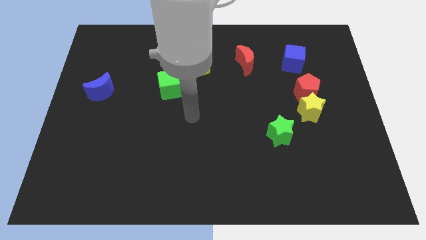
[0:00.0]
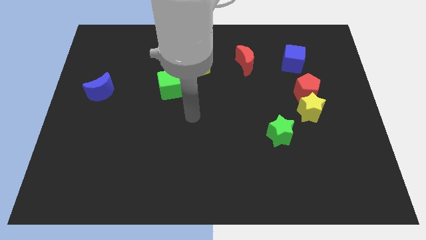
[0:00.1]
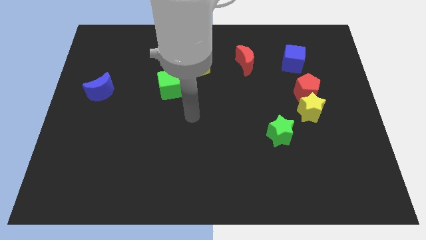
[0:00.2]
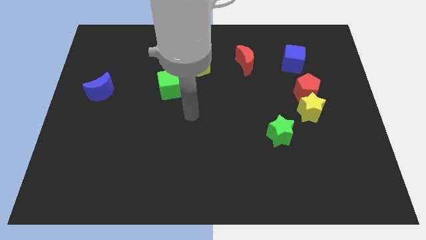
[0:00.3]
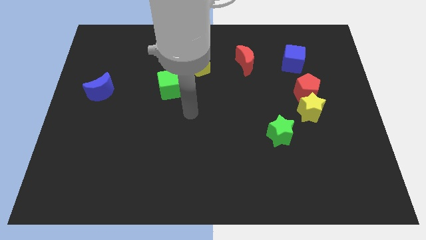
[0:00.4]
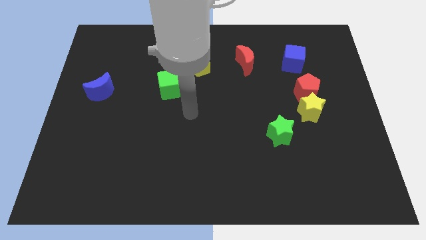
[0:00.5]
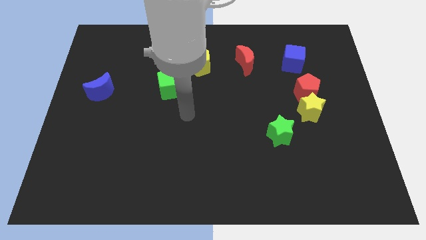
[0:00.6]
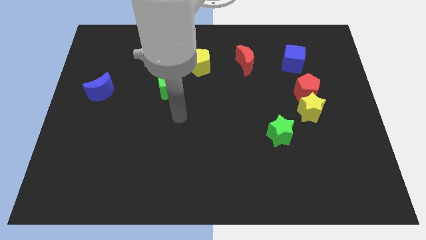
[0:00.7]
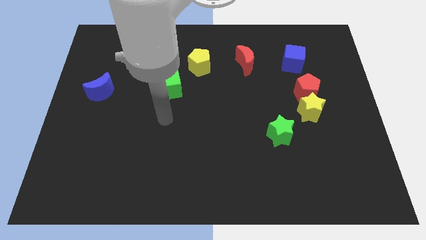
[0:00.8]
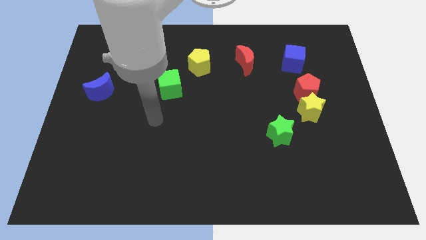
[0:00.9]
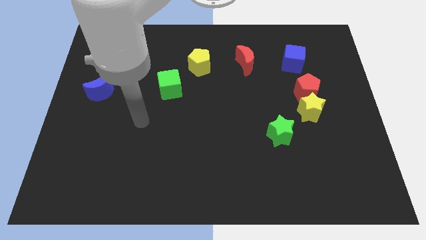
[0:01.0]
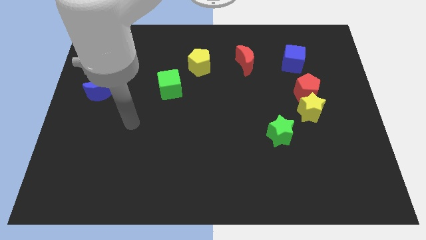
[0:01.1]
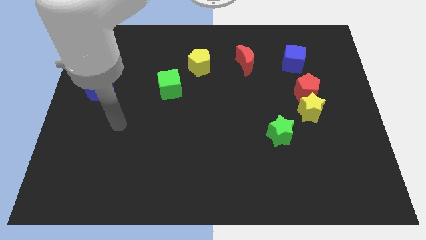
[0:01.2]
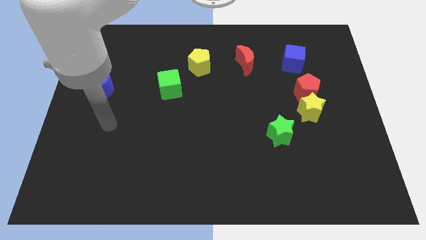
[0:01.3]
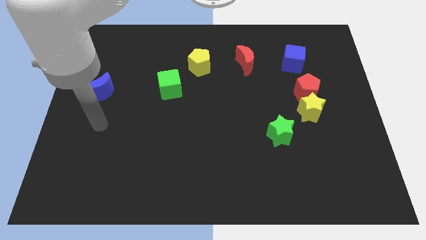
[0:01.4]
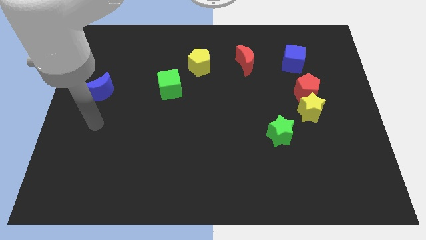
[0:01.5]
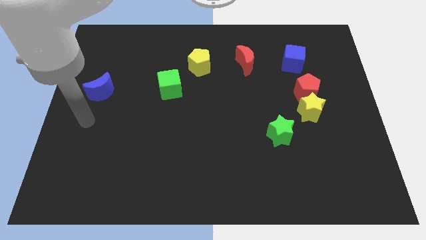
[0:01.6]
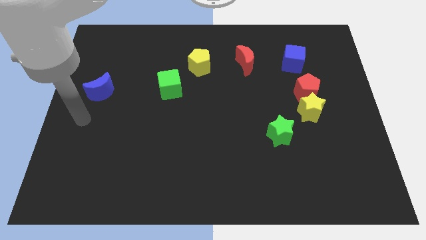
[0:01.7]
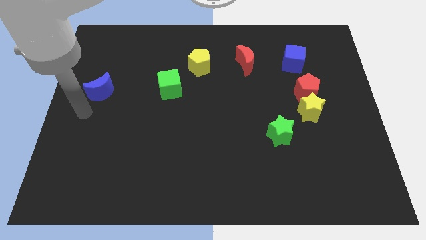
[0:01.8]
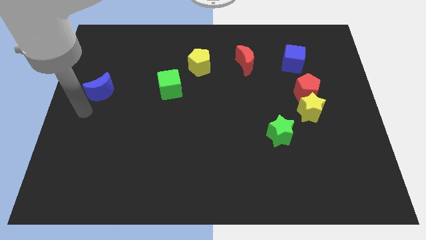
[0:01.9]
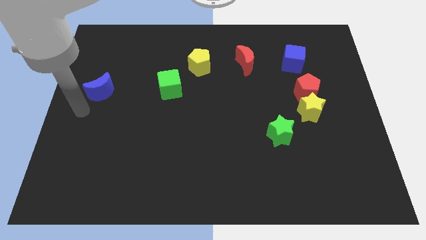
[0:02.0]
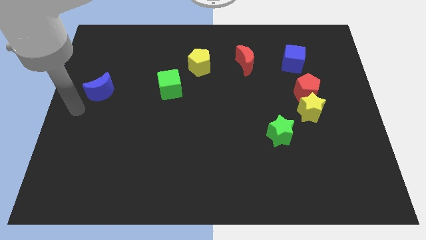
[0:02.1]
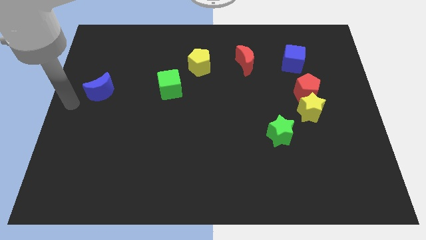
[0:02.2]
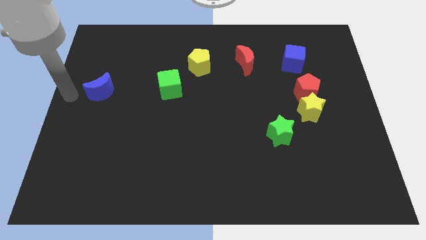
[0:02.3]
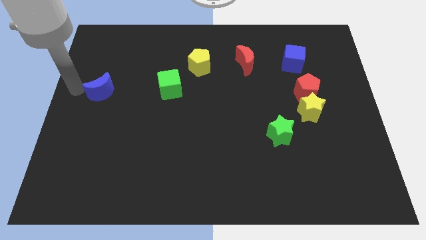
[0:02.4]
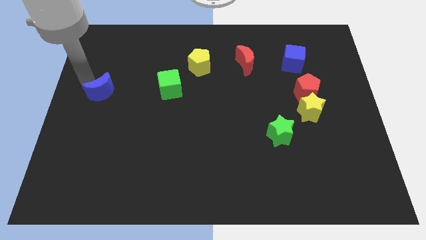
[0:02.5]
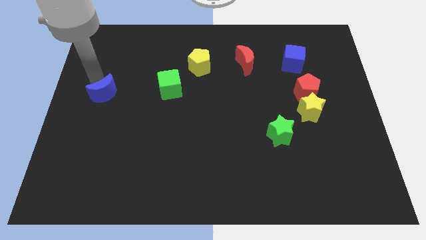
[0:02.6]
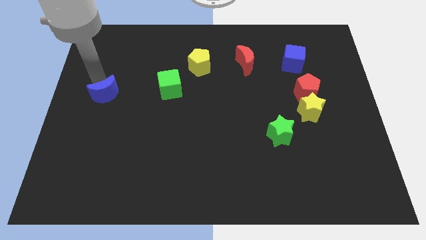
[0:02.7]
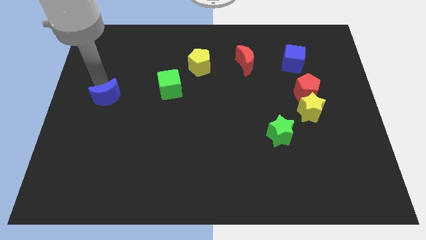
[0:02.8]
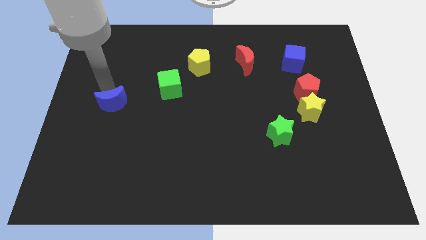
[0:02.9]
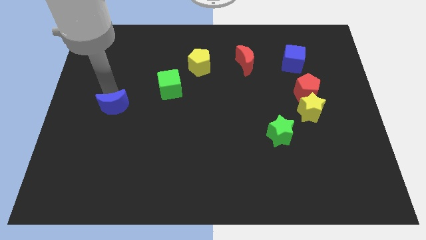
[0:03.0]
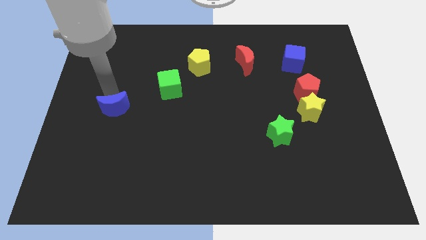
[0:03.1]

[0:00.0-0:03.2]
move the blue moon downward

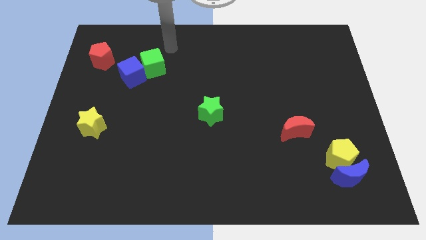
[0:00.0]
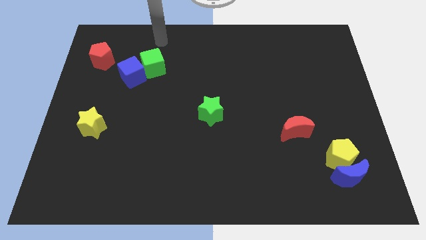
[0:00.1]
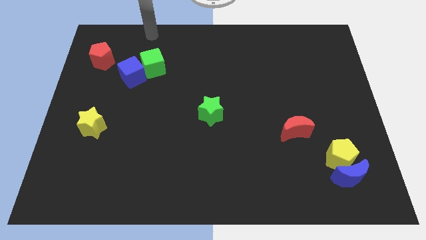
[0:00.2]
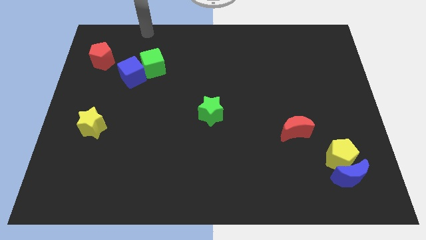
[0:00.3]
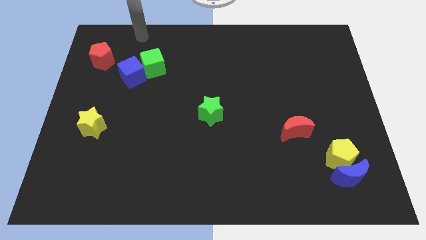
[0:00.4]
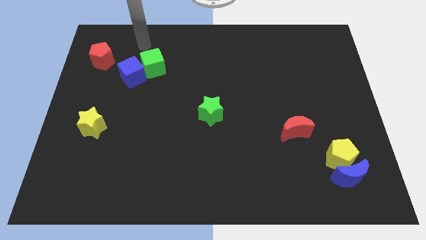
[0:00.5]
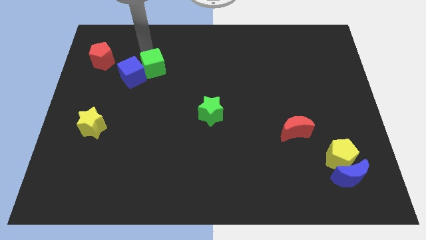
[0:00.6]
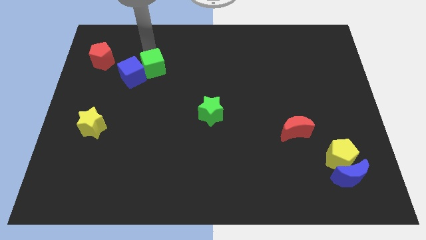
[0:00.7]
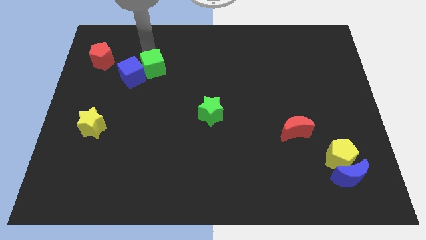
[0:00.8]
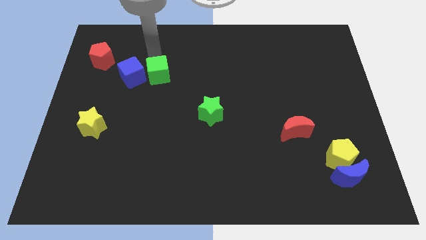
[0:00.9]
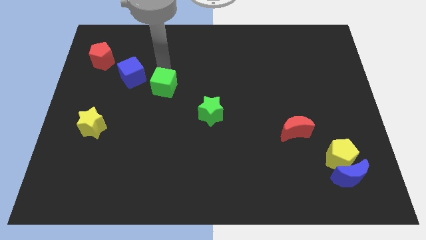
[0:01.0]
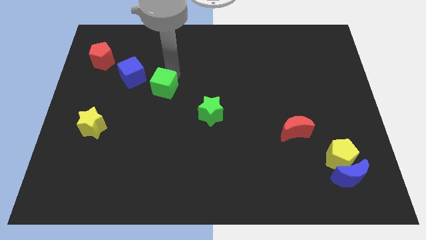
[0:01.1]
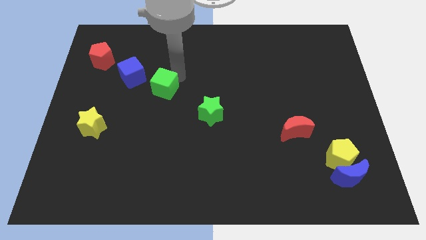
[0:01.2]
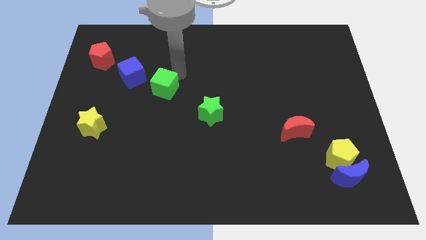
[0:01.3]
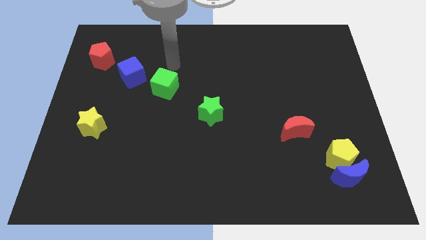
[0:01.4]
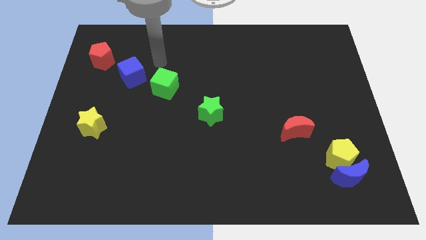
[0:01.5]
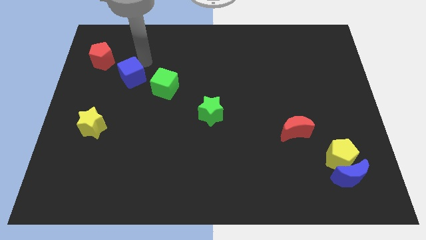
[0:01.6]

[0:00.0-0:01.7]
move the green cube diagonally to the bottom right of the blue cube

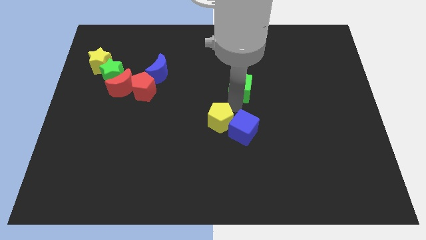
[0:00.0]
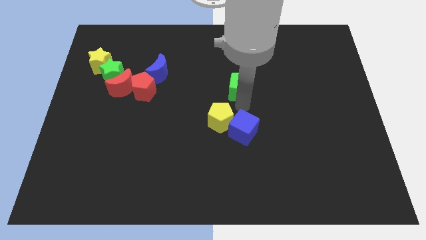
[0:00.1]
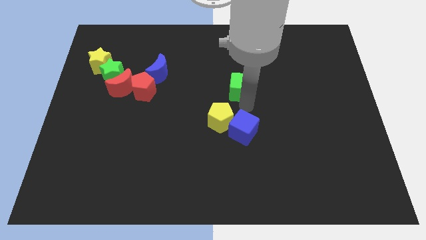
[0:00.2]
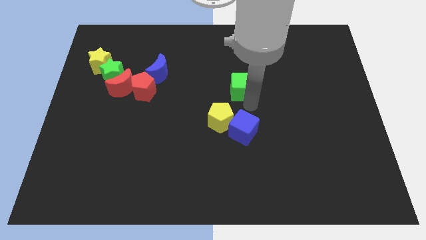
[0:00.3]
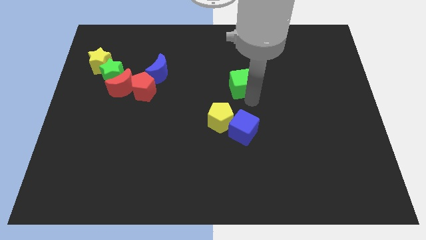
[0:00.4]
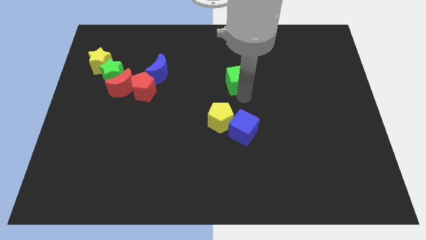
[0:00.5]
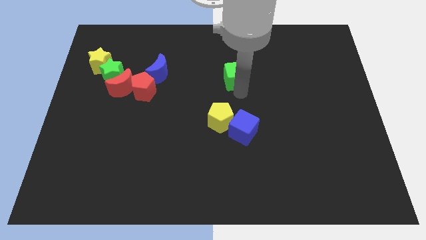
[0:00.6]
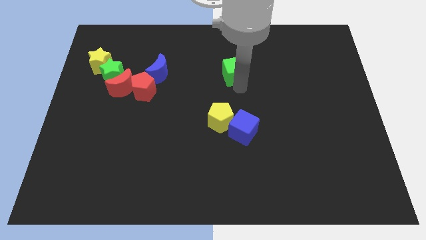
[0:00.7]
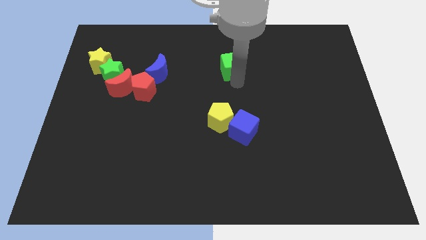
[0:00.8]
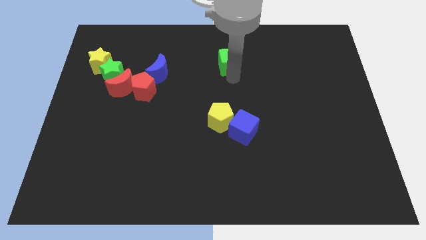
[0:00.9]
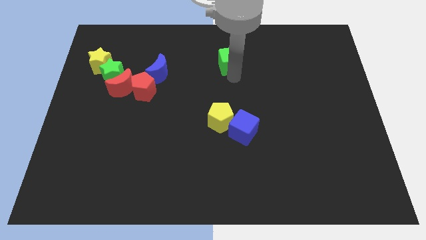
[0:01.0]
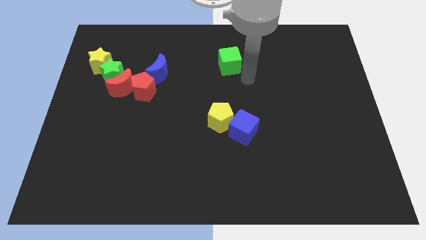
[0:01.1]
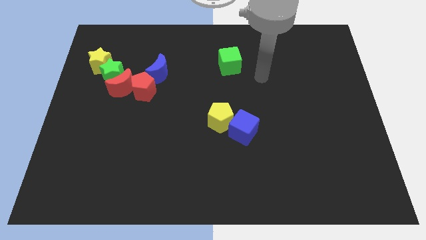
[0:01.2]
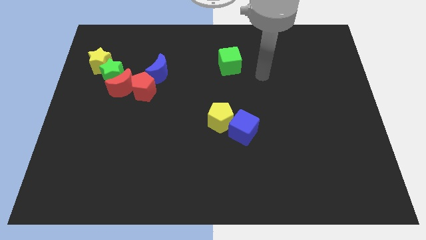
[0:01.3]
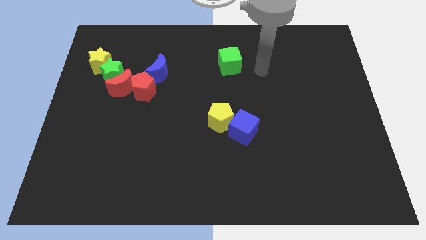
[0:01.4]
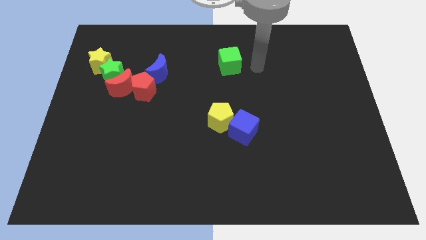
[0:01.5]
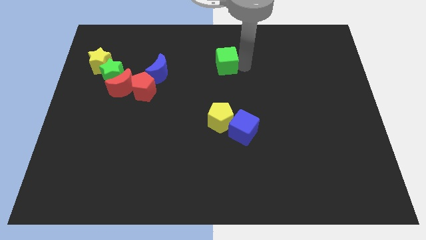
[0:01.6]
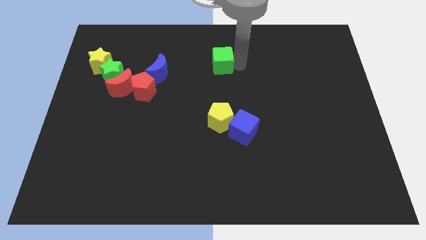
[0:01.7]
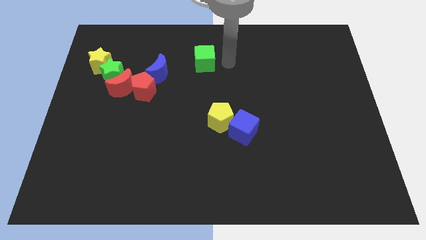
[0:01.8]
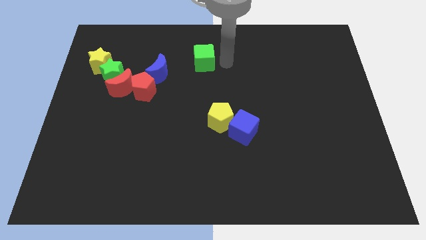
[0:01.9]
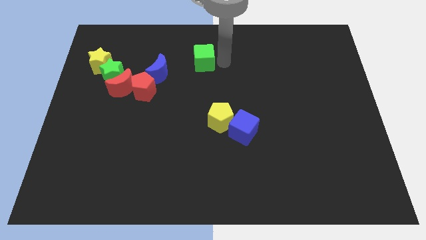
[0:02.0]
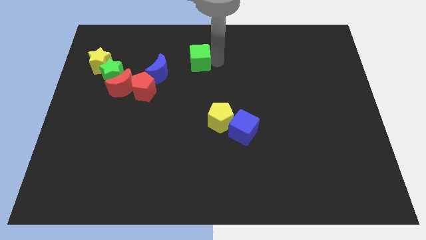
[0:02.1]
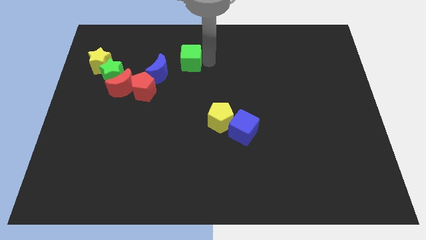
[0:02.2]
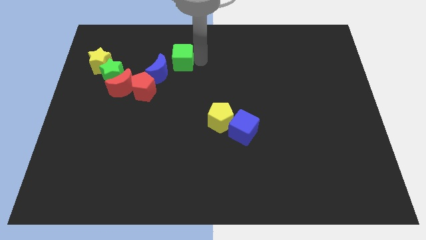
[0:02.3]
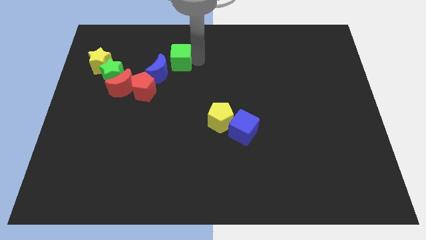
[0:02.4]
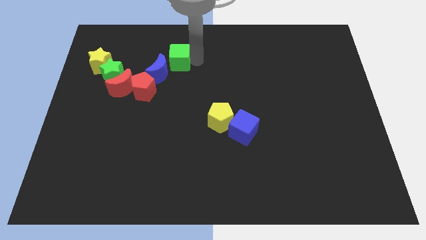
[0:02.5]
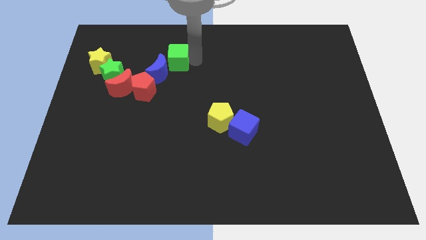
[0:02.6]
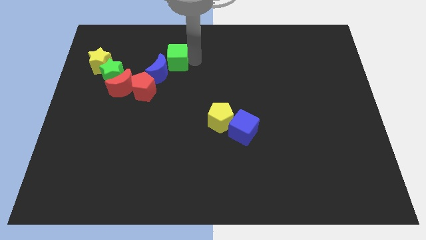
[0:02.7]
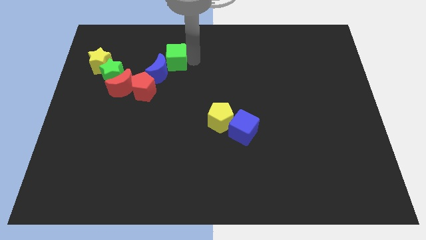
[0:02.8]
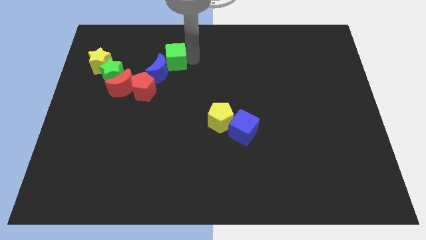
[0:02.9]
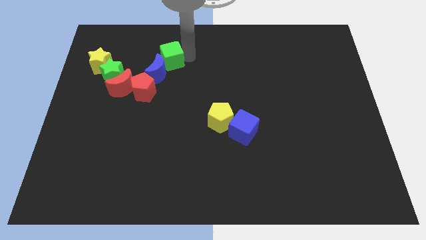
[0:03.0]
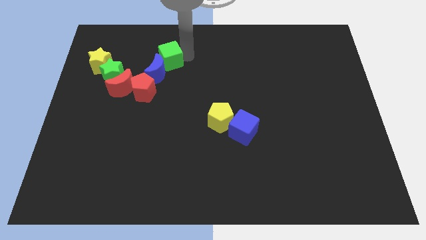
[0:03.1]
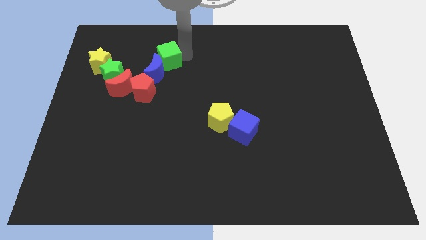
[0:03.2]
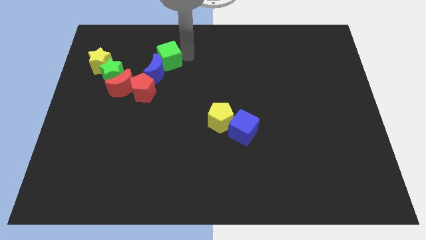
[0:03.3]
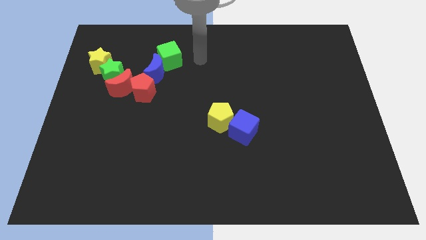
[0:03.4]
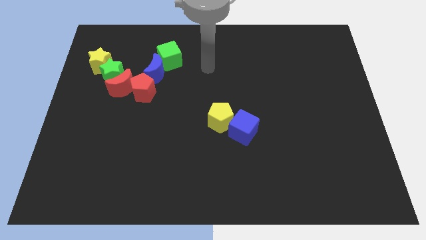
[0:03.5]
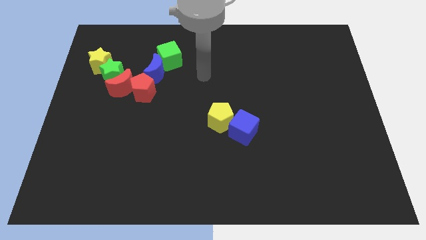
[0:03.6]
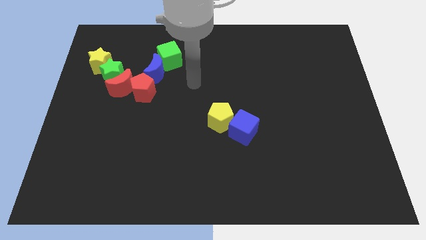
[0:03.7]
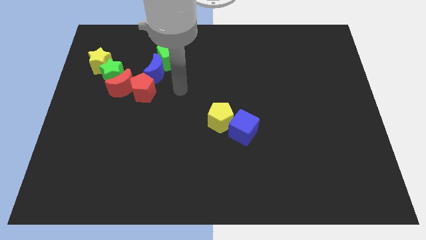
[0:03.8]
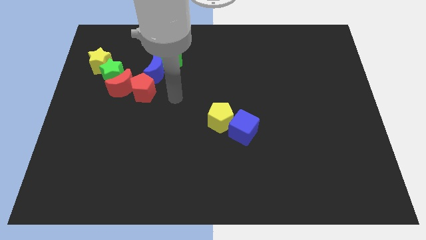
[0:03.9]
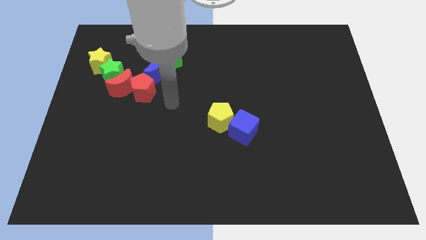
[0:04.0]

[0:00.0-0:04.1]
push green cube into blue moon
